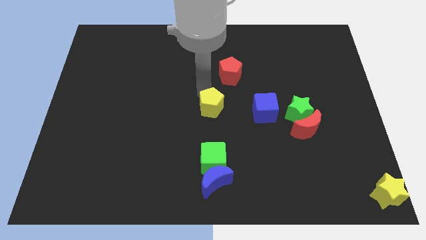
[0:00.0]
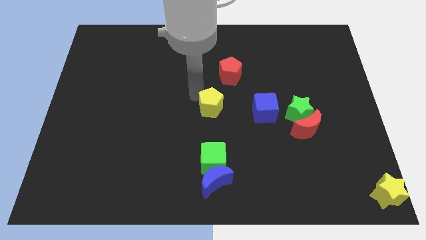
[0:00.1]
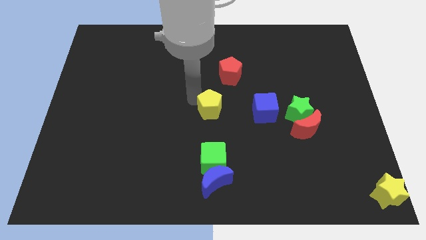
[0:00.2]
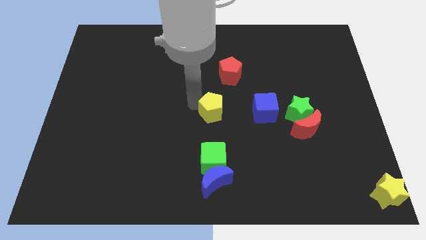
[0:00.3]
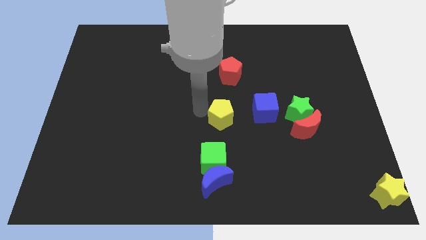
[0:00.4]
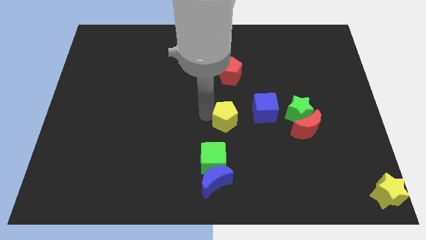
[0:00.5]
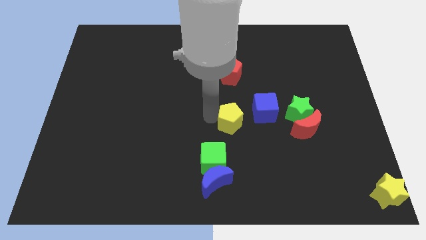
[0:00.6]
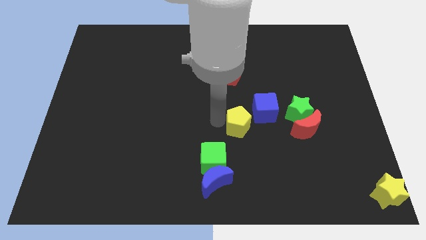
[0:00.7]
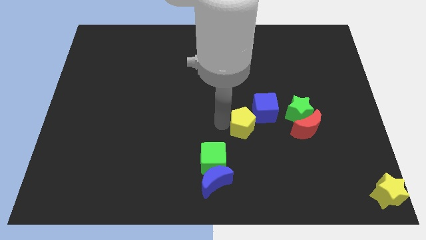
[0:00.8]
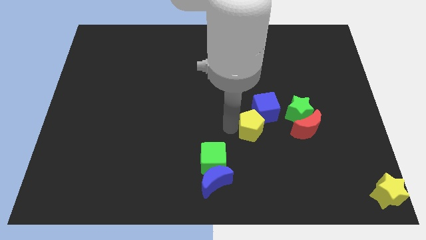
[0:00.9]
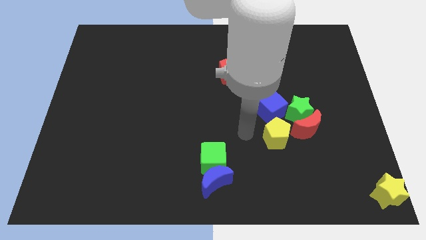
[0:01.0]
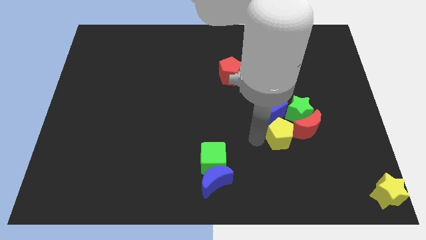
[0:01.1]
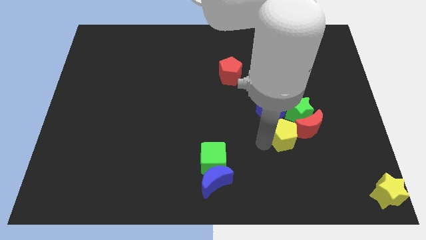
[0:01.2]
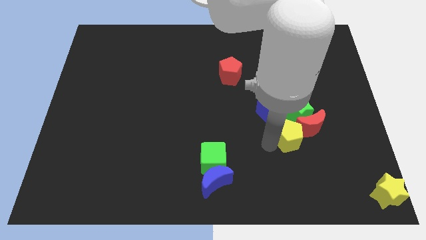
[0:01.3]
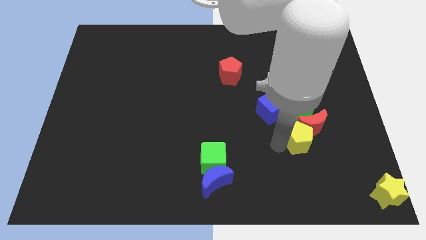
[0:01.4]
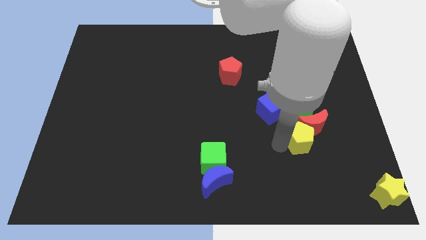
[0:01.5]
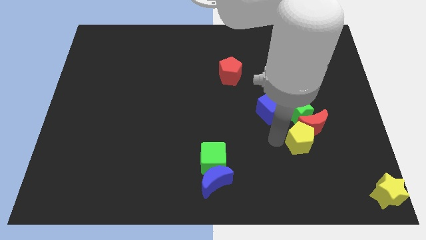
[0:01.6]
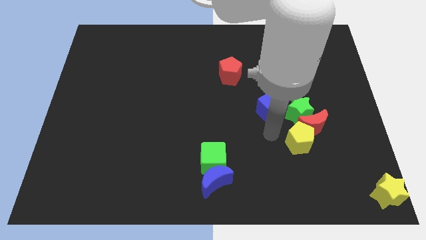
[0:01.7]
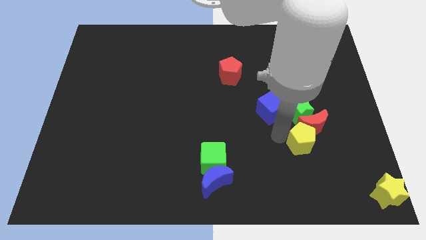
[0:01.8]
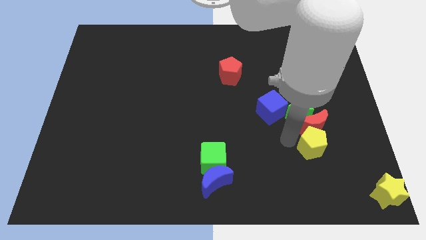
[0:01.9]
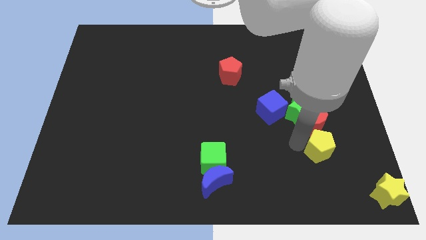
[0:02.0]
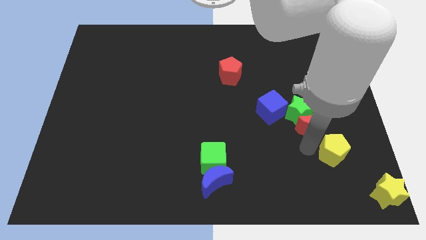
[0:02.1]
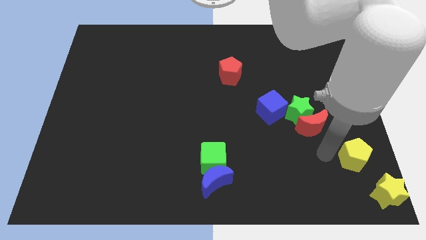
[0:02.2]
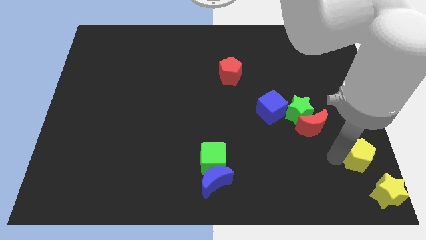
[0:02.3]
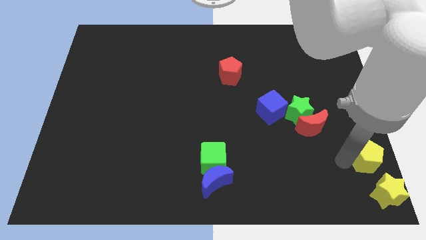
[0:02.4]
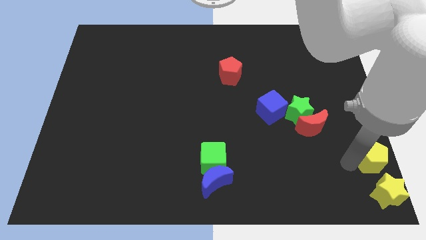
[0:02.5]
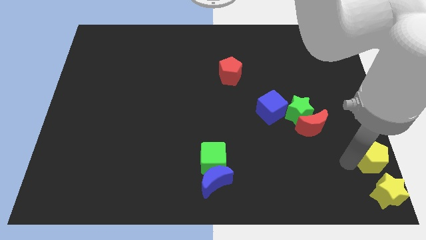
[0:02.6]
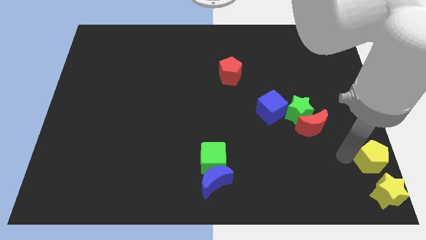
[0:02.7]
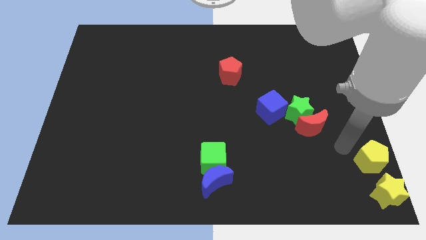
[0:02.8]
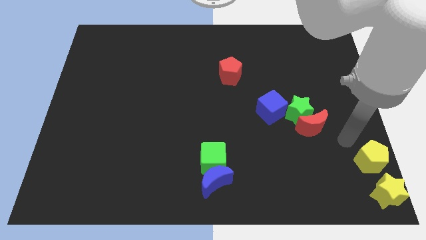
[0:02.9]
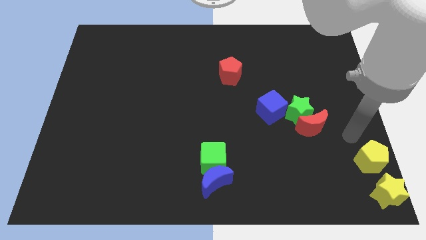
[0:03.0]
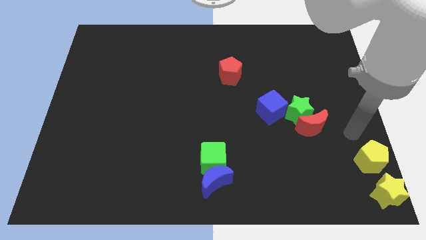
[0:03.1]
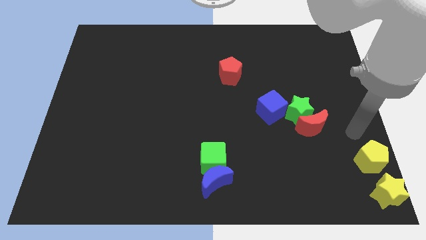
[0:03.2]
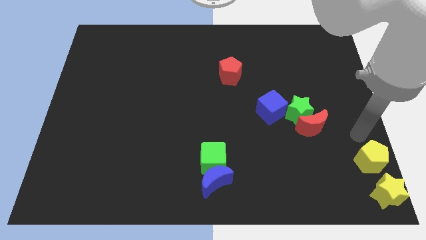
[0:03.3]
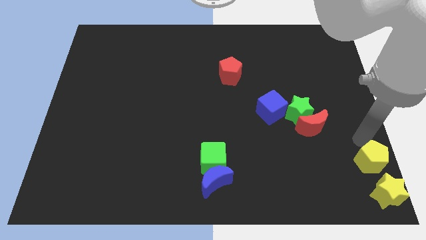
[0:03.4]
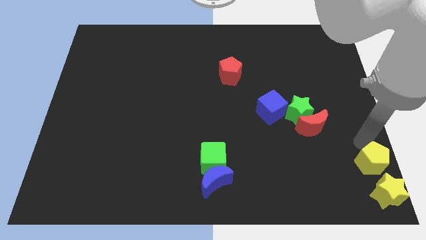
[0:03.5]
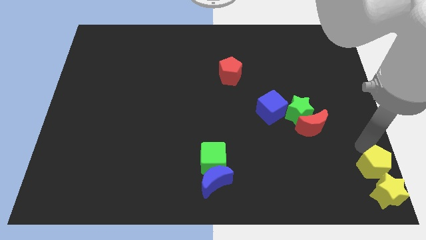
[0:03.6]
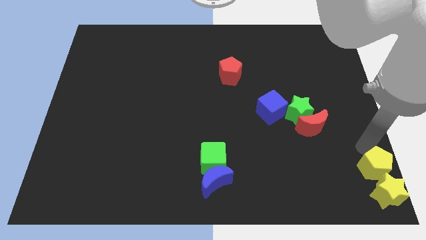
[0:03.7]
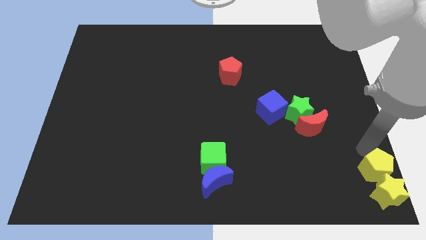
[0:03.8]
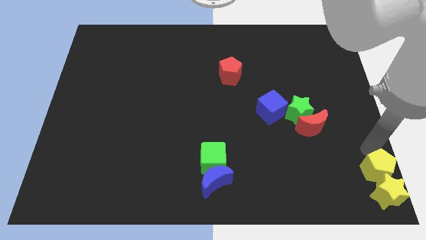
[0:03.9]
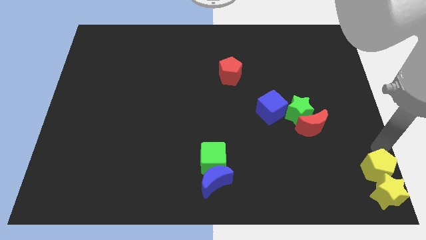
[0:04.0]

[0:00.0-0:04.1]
push the yellow pentagon into the yellow star

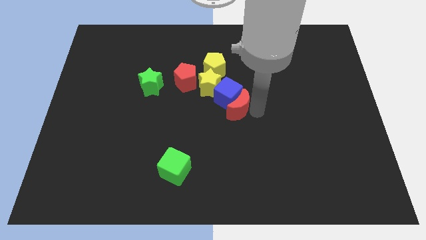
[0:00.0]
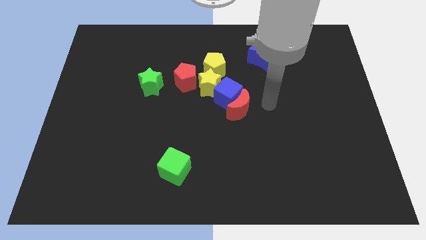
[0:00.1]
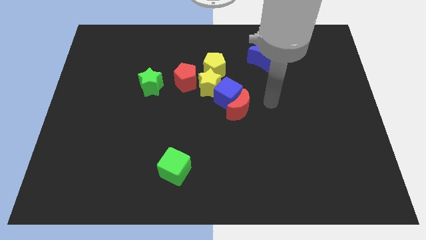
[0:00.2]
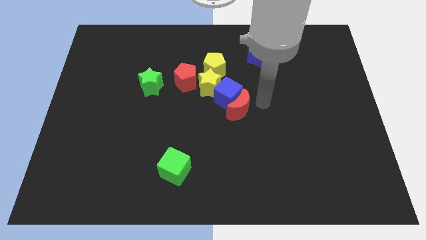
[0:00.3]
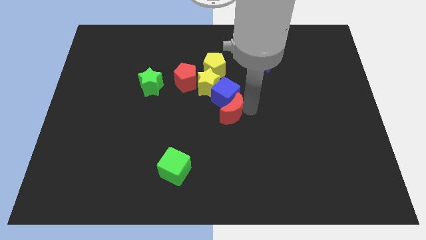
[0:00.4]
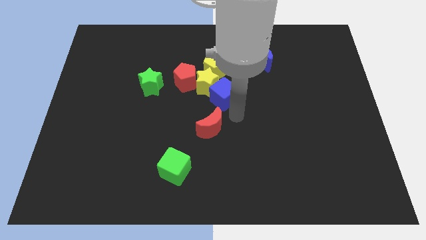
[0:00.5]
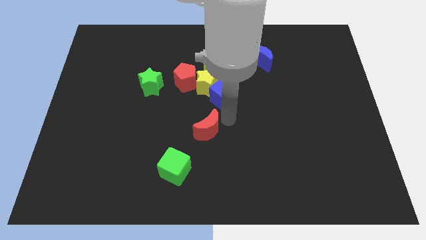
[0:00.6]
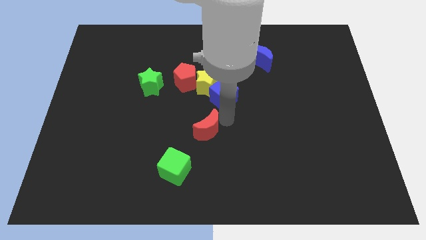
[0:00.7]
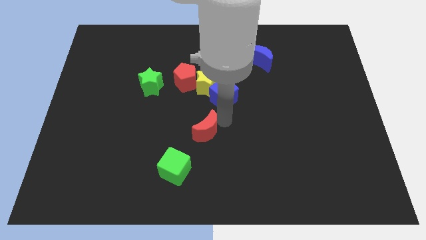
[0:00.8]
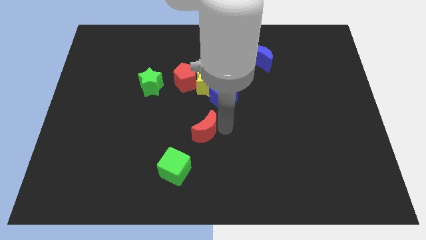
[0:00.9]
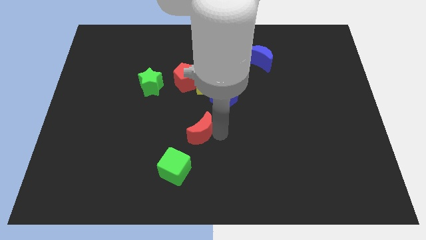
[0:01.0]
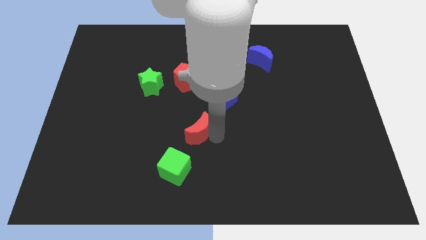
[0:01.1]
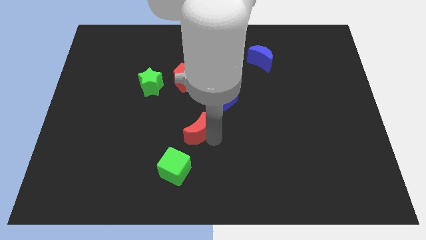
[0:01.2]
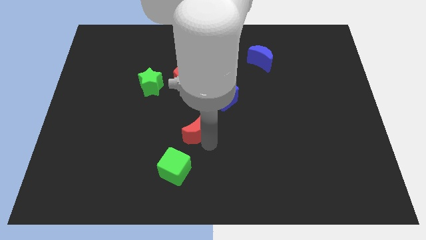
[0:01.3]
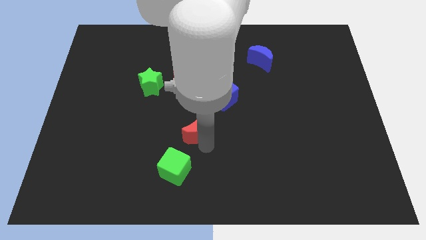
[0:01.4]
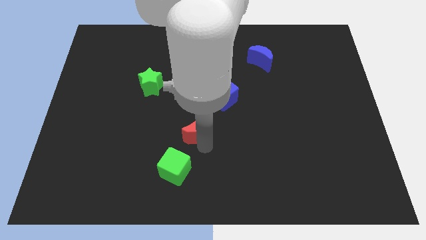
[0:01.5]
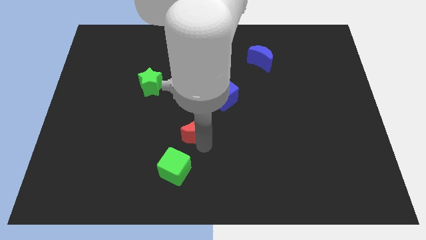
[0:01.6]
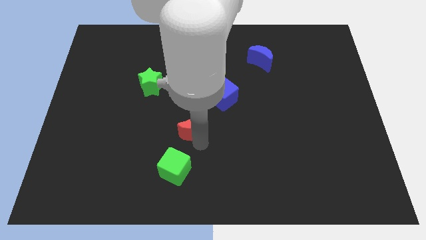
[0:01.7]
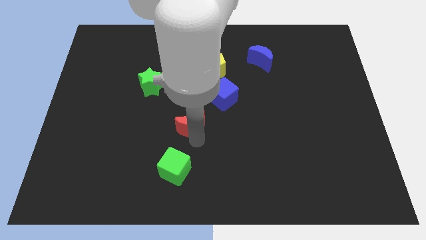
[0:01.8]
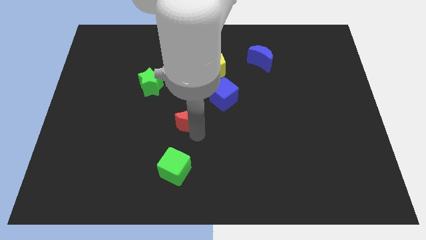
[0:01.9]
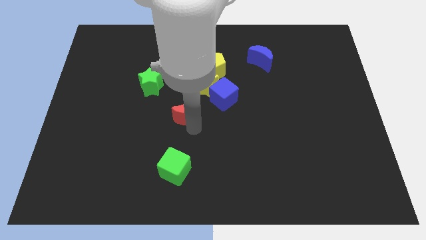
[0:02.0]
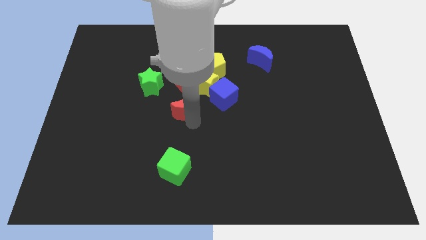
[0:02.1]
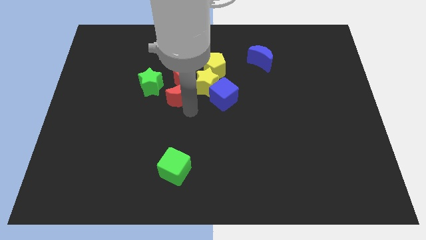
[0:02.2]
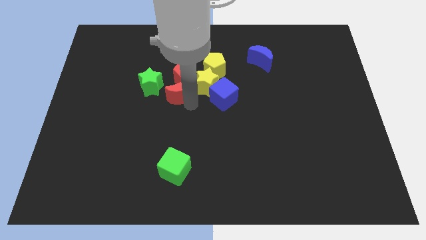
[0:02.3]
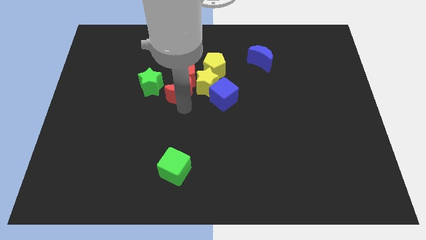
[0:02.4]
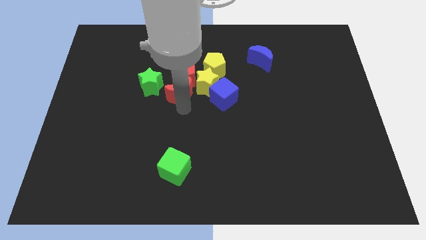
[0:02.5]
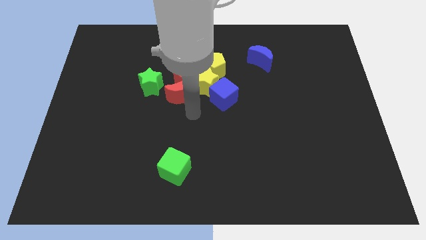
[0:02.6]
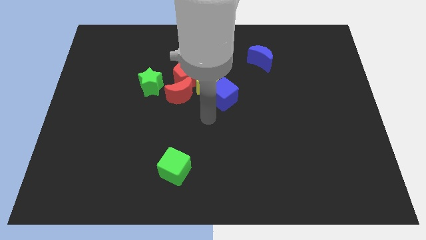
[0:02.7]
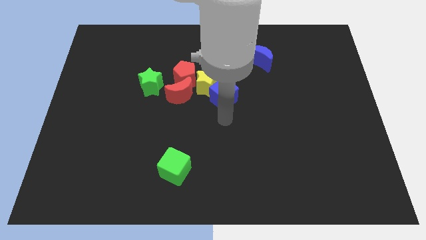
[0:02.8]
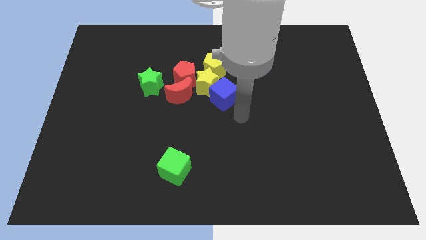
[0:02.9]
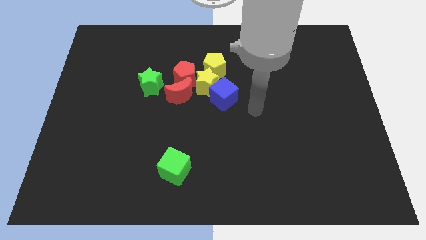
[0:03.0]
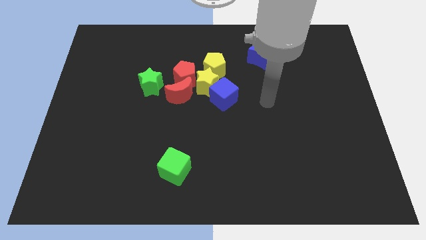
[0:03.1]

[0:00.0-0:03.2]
place the red crescent to the bottom side of the red pentagon

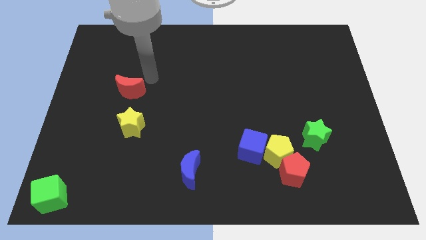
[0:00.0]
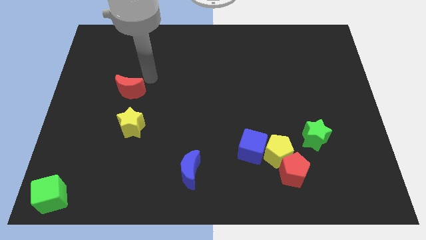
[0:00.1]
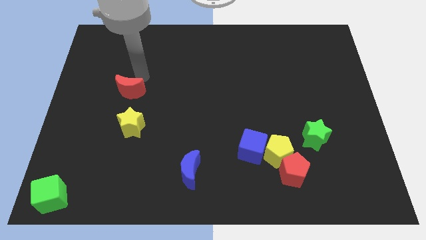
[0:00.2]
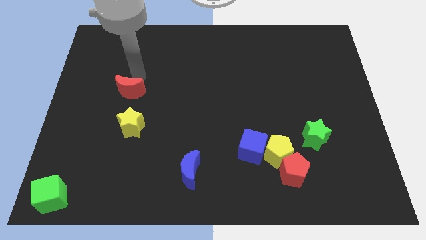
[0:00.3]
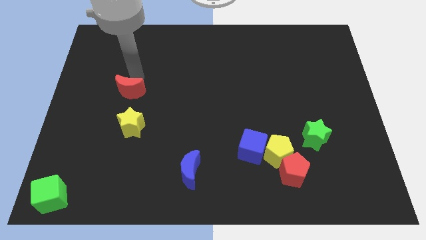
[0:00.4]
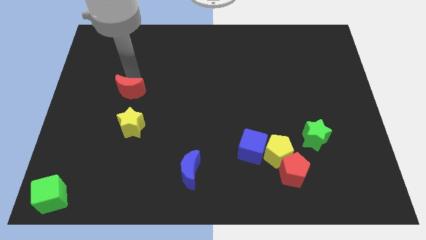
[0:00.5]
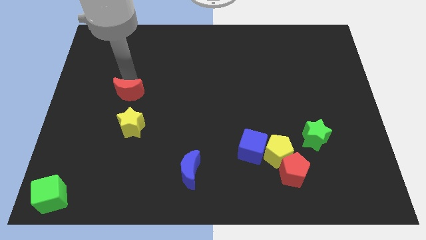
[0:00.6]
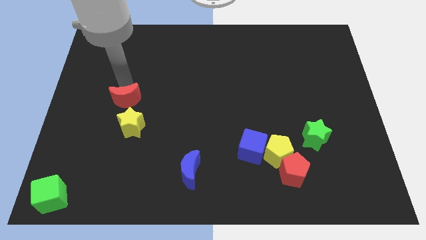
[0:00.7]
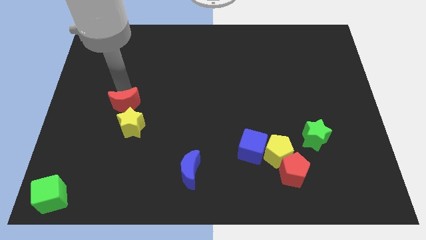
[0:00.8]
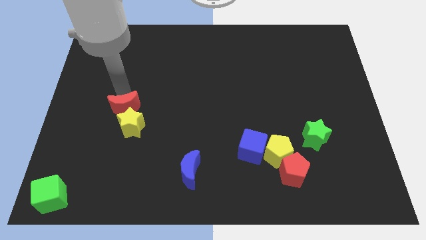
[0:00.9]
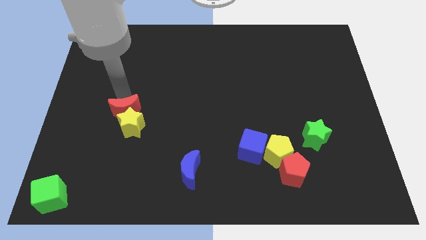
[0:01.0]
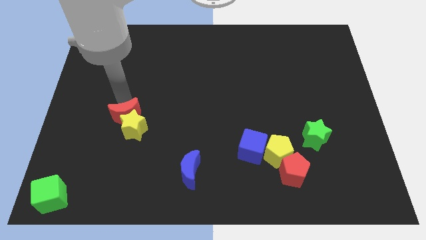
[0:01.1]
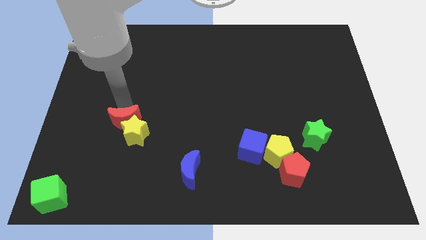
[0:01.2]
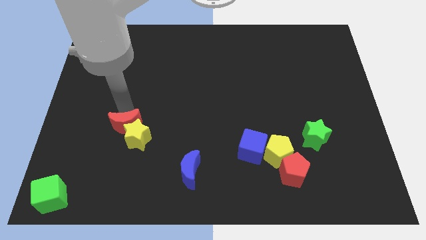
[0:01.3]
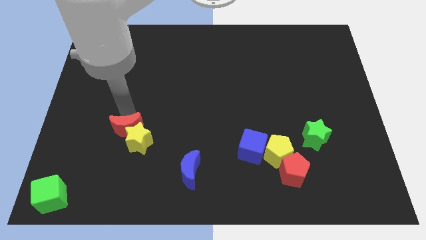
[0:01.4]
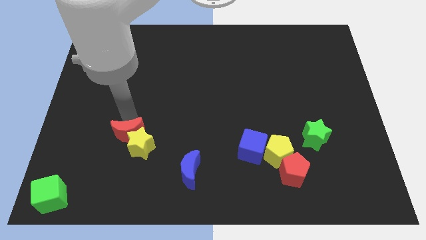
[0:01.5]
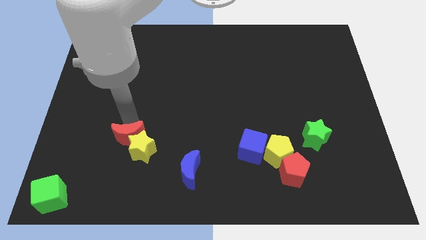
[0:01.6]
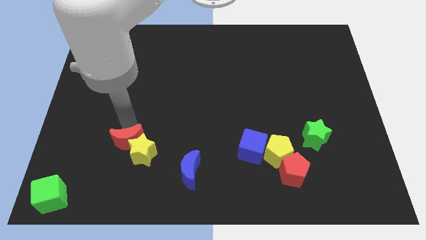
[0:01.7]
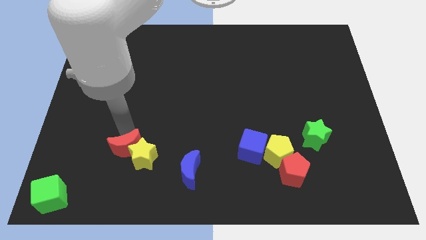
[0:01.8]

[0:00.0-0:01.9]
push the yellow star with red crescent
